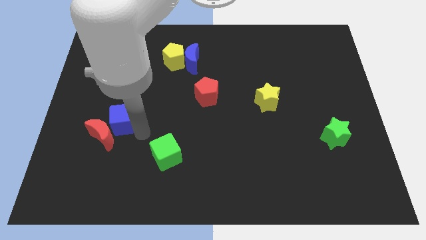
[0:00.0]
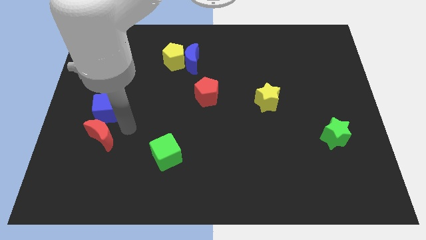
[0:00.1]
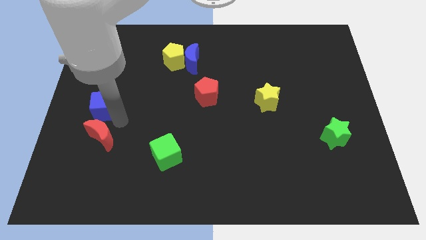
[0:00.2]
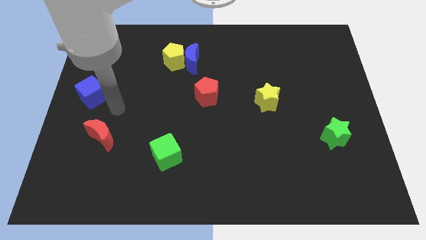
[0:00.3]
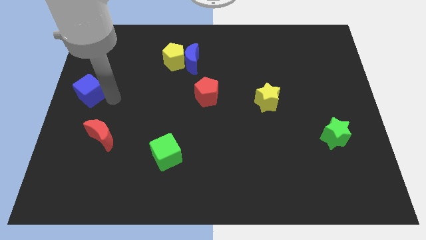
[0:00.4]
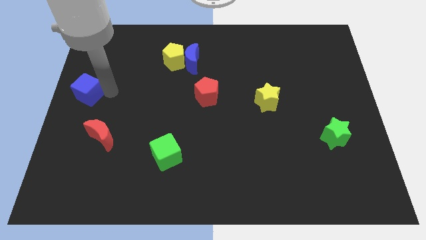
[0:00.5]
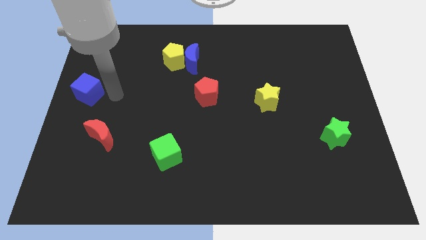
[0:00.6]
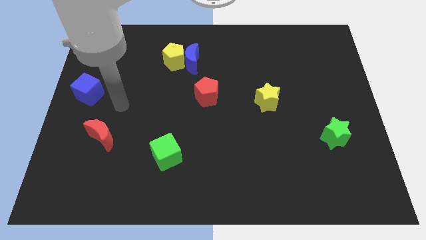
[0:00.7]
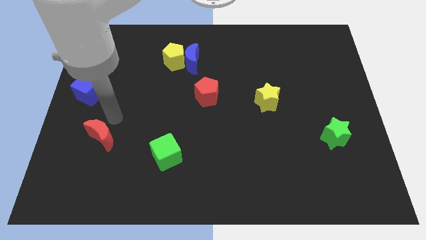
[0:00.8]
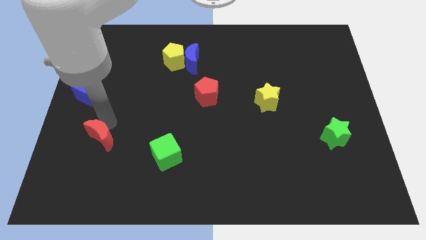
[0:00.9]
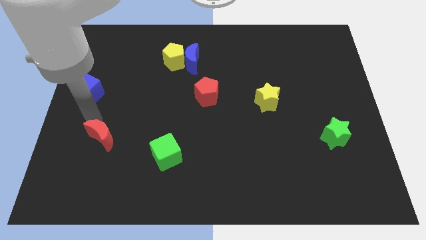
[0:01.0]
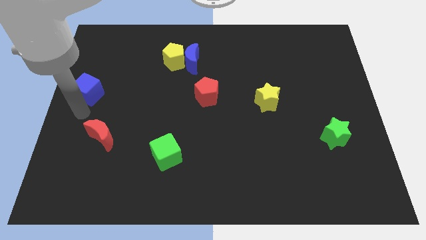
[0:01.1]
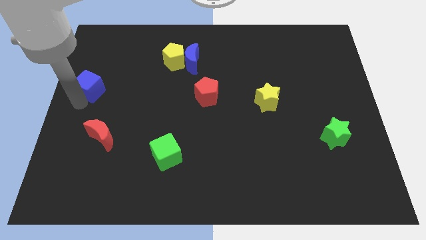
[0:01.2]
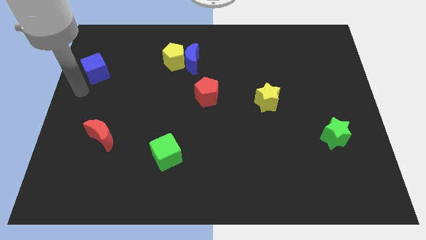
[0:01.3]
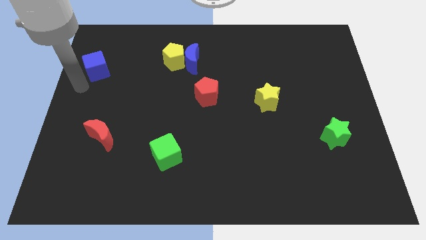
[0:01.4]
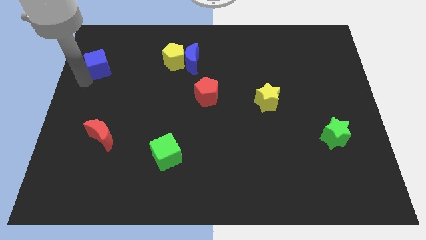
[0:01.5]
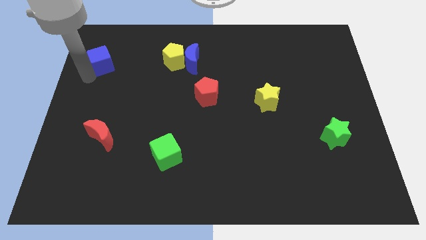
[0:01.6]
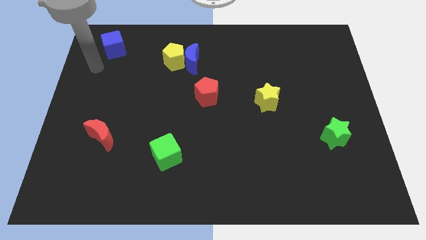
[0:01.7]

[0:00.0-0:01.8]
separate the blue cube from red moon

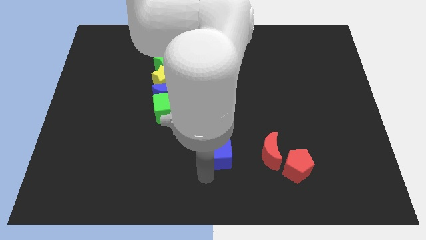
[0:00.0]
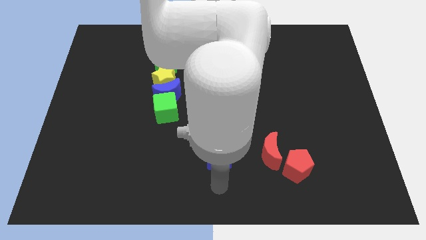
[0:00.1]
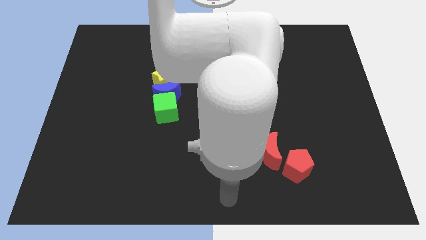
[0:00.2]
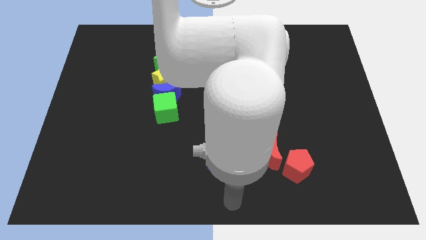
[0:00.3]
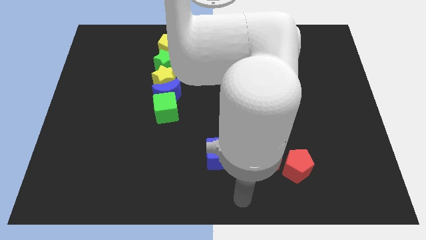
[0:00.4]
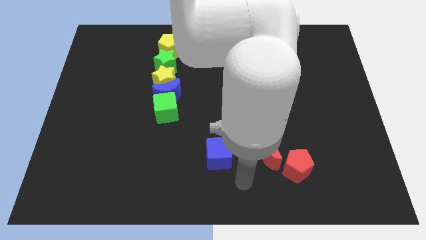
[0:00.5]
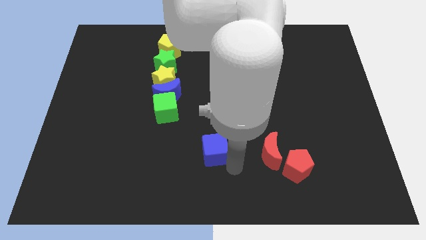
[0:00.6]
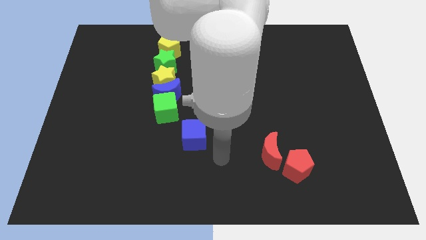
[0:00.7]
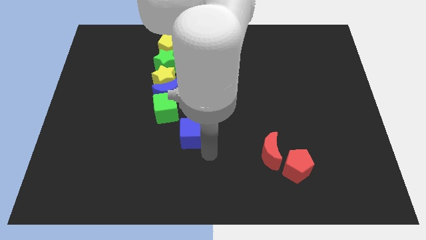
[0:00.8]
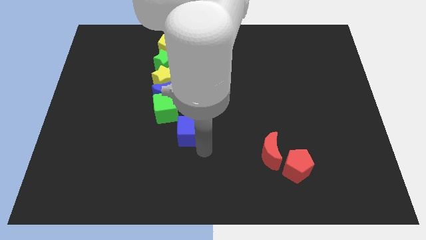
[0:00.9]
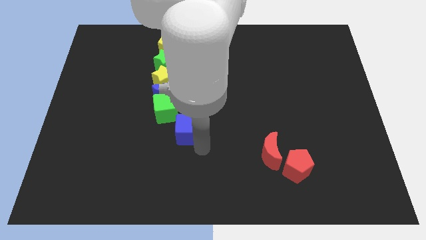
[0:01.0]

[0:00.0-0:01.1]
place blue cube to bottom right of green cube

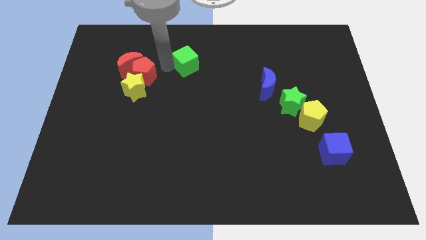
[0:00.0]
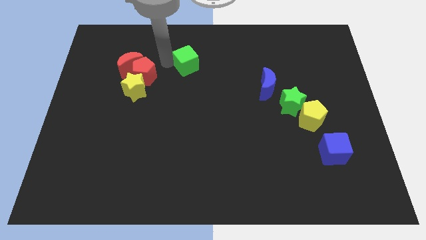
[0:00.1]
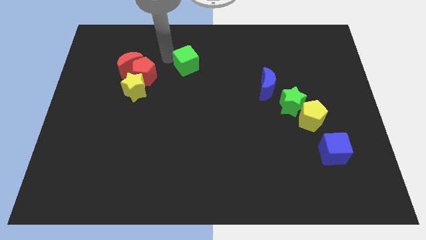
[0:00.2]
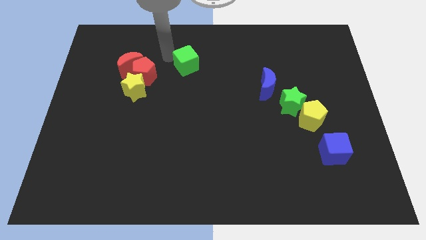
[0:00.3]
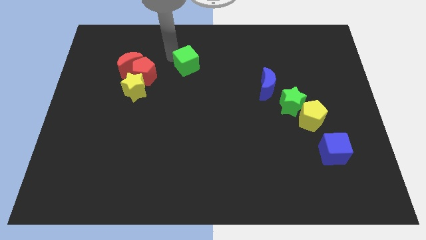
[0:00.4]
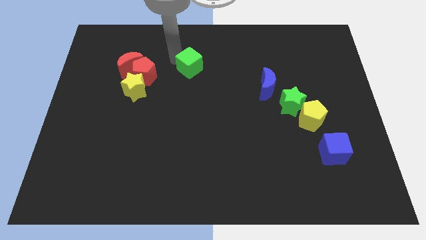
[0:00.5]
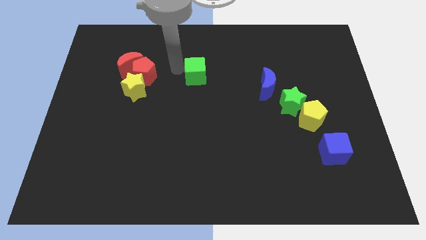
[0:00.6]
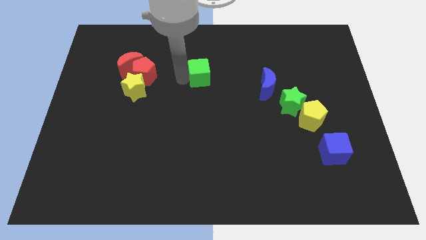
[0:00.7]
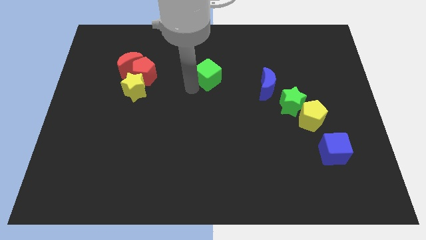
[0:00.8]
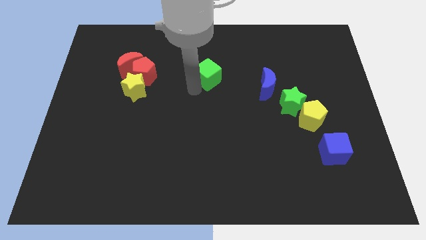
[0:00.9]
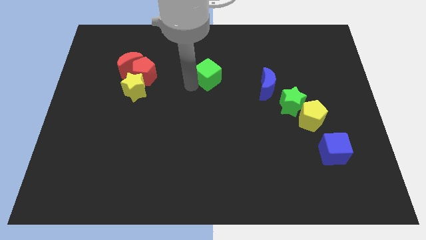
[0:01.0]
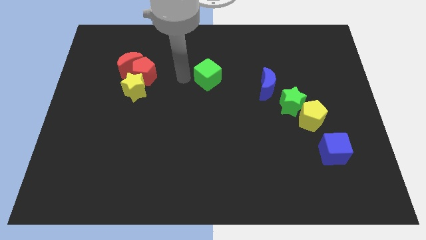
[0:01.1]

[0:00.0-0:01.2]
push the green cube to the right of the board

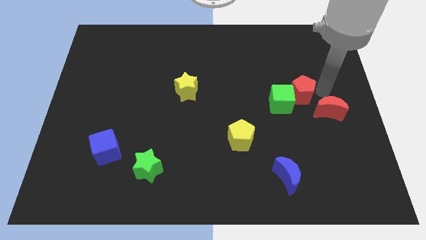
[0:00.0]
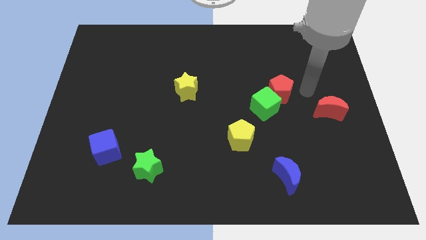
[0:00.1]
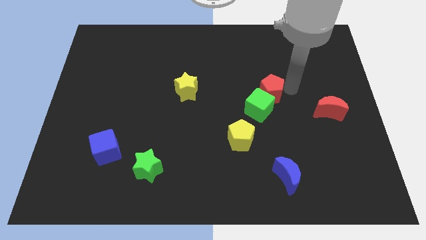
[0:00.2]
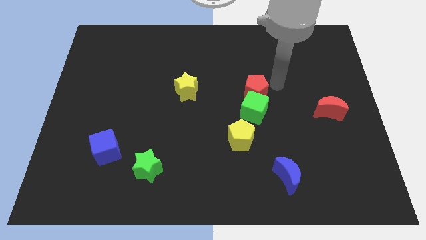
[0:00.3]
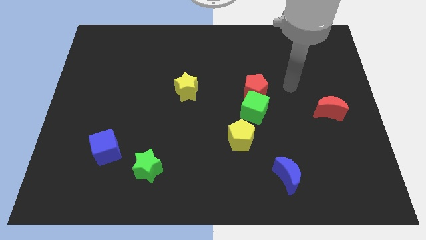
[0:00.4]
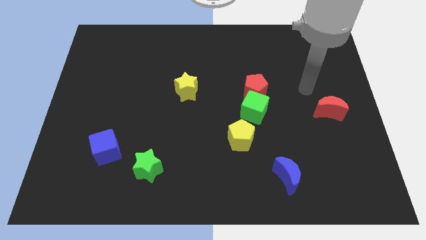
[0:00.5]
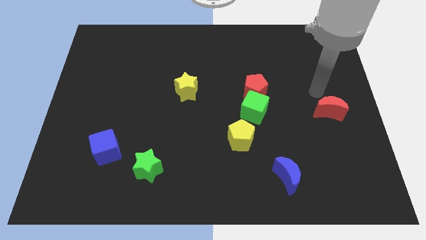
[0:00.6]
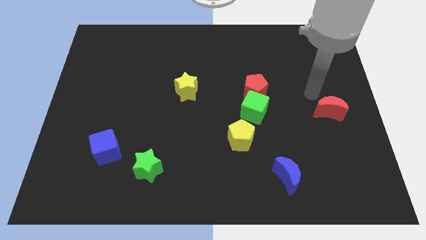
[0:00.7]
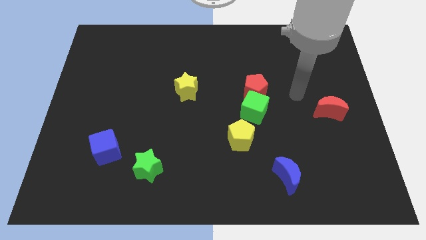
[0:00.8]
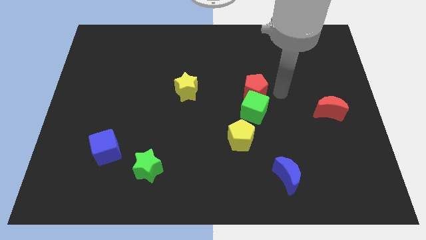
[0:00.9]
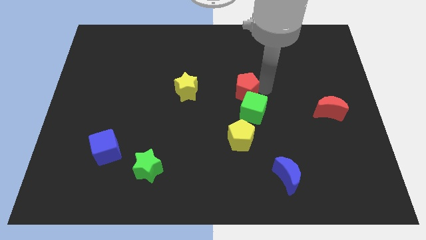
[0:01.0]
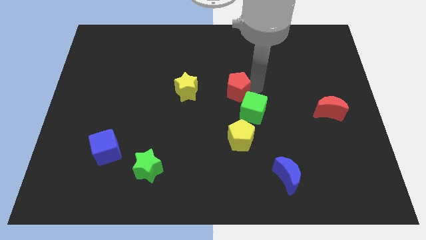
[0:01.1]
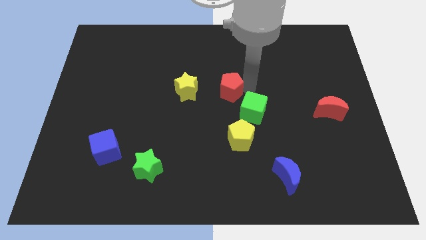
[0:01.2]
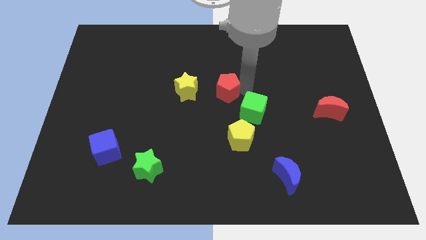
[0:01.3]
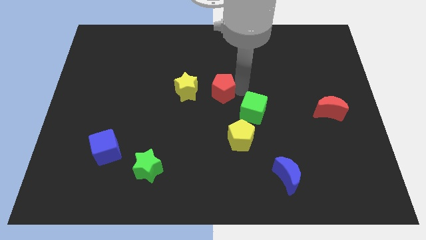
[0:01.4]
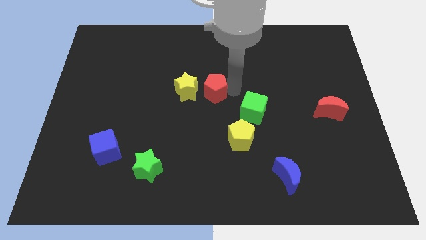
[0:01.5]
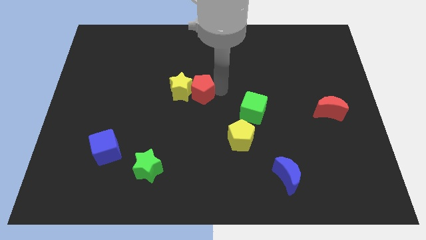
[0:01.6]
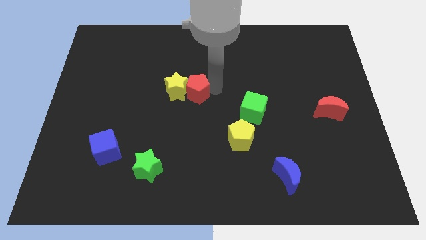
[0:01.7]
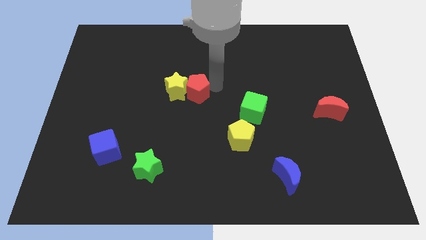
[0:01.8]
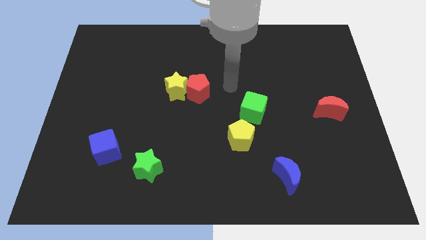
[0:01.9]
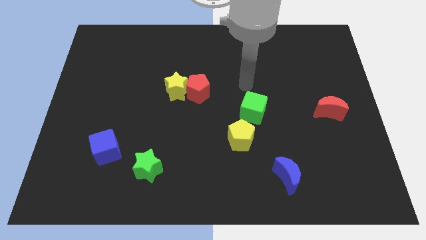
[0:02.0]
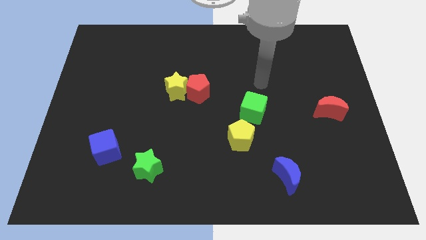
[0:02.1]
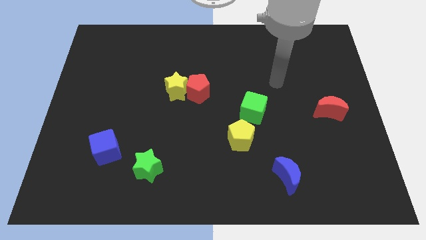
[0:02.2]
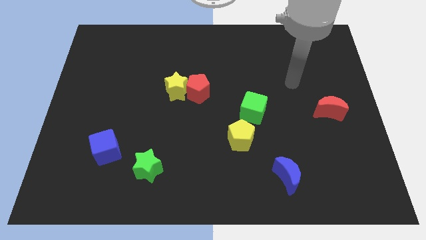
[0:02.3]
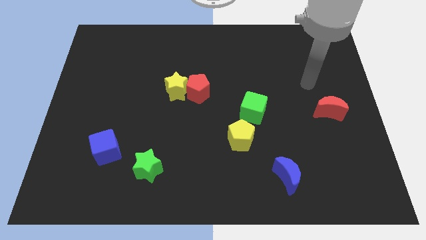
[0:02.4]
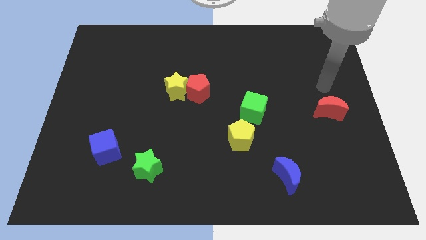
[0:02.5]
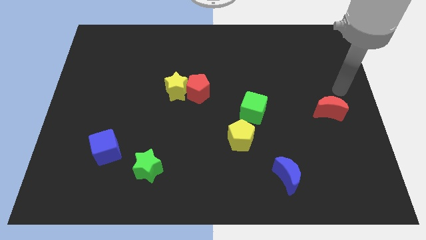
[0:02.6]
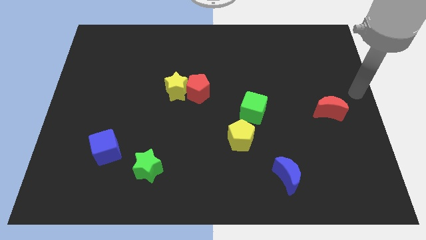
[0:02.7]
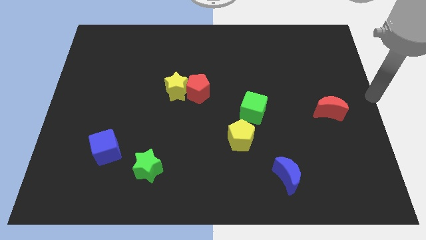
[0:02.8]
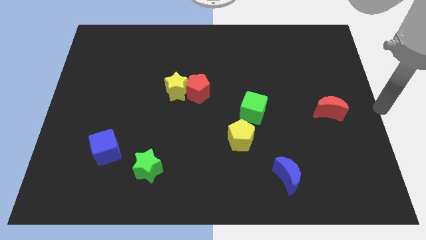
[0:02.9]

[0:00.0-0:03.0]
push the red pentagon right to the yellow star

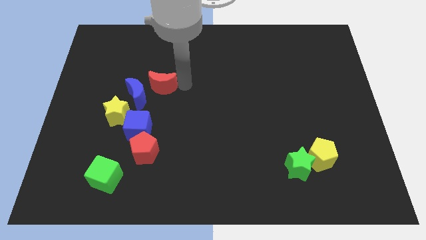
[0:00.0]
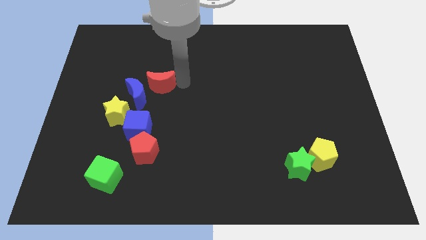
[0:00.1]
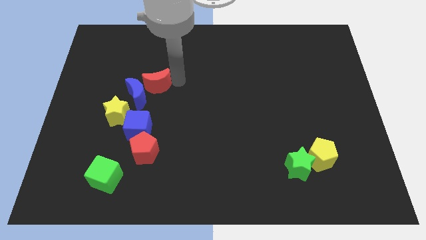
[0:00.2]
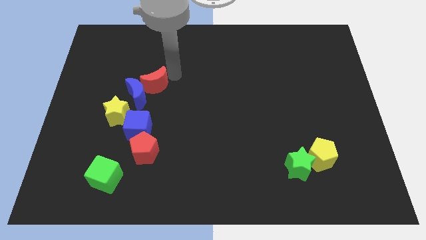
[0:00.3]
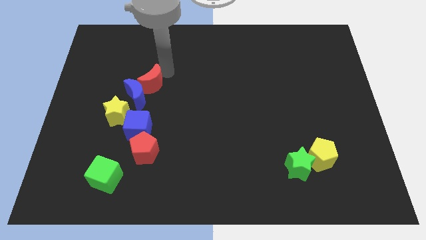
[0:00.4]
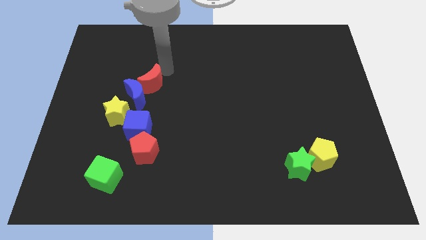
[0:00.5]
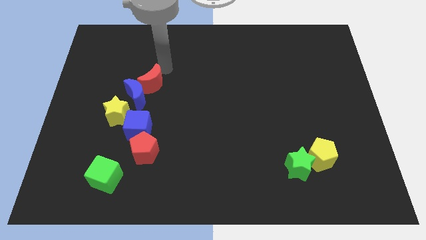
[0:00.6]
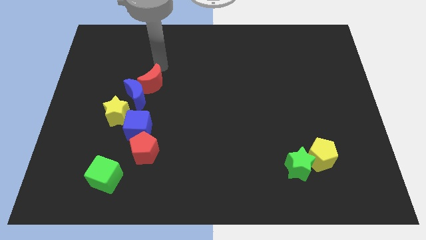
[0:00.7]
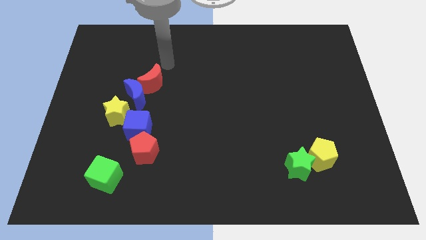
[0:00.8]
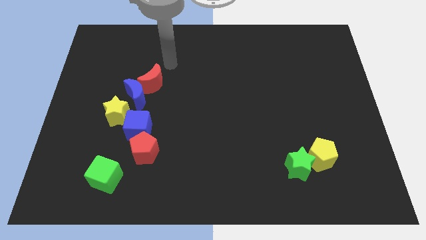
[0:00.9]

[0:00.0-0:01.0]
move red crescent towards the blue moon

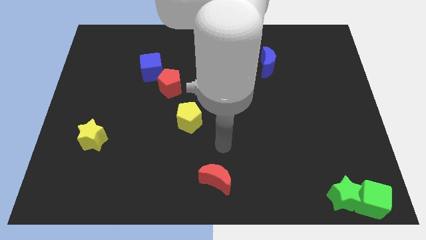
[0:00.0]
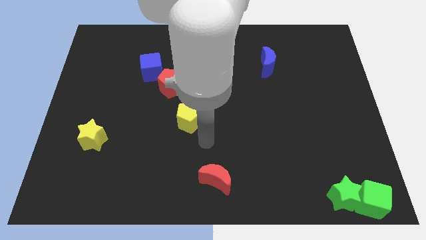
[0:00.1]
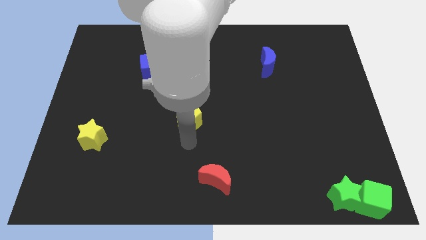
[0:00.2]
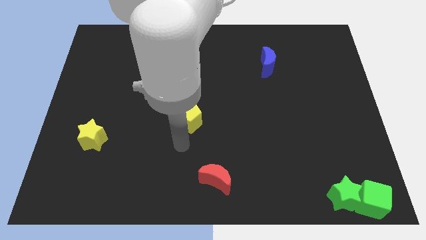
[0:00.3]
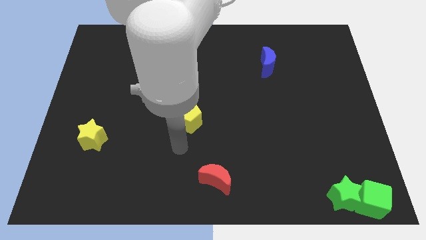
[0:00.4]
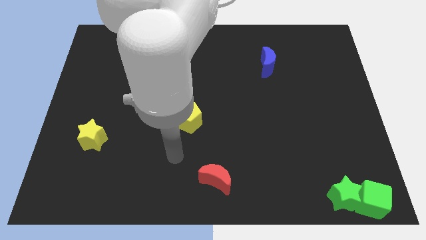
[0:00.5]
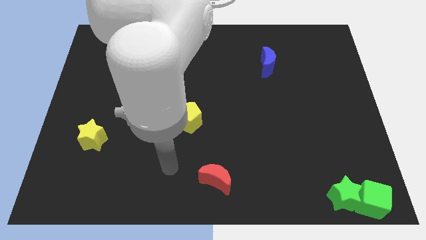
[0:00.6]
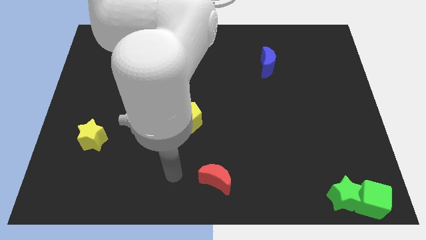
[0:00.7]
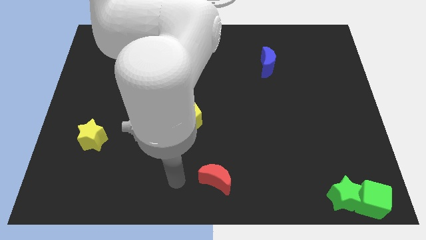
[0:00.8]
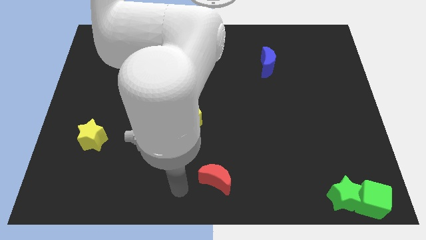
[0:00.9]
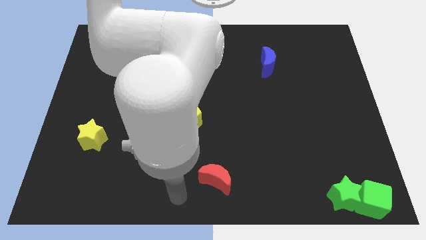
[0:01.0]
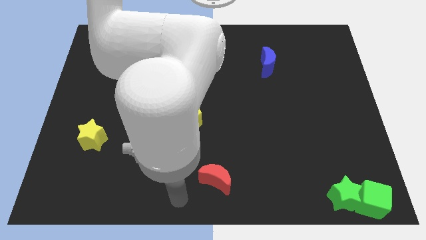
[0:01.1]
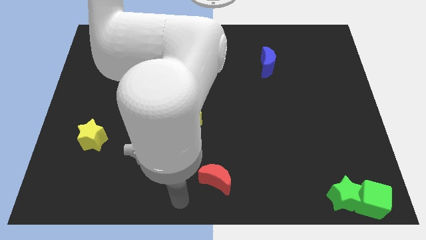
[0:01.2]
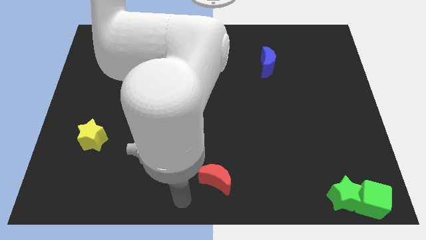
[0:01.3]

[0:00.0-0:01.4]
put your arm at the bottom center of the board
